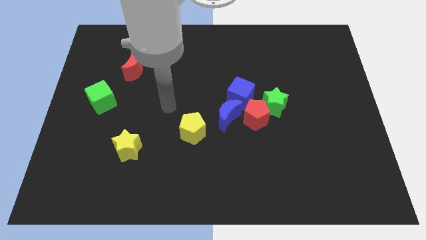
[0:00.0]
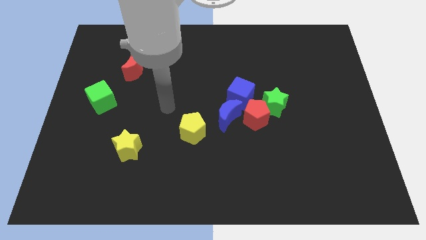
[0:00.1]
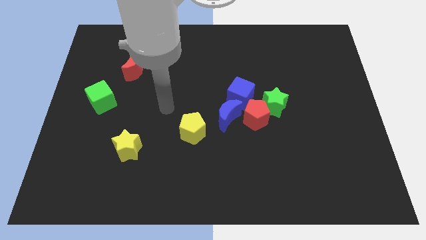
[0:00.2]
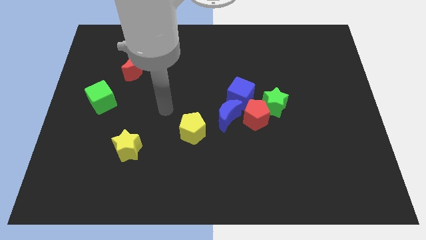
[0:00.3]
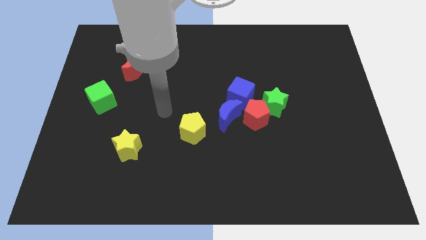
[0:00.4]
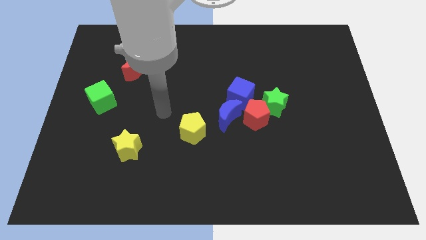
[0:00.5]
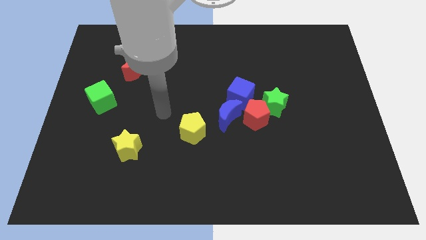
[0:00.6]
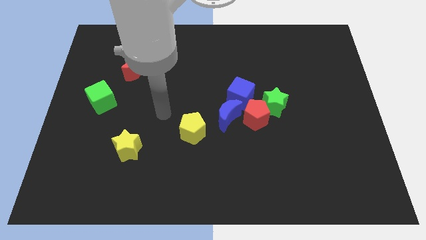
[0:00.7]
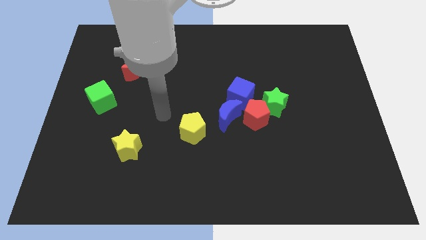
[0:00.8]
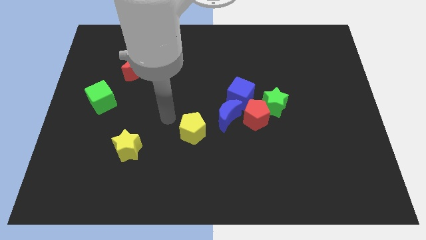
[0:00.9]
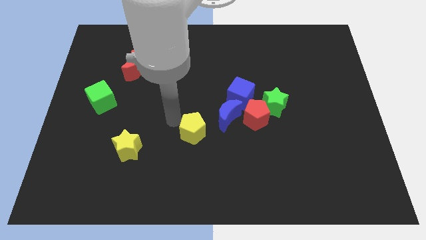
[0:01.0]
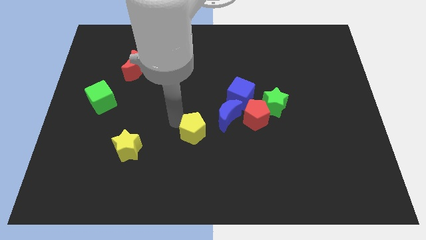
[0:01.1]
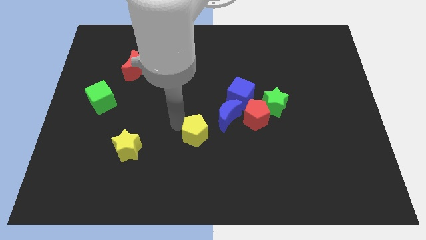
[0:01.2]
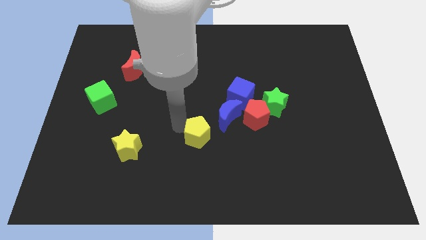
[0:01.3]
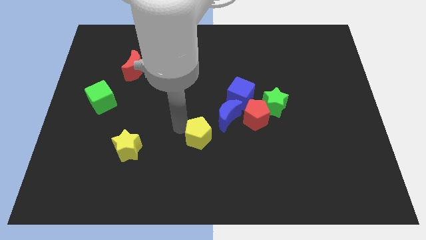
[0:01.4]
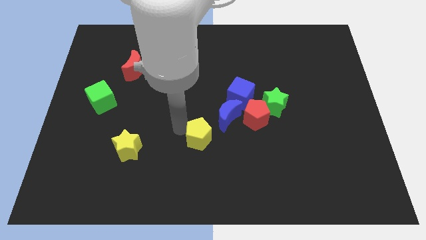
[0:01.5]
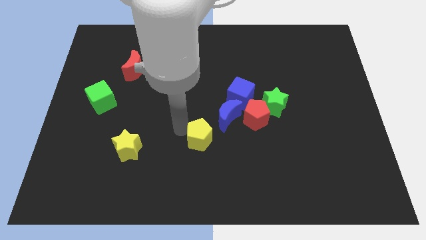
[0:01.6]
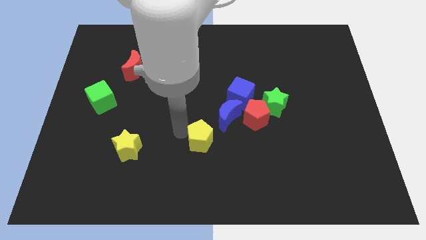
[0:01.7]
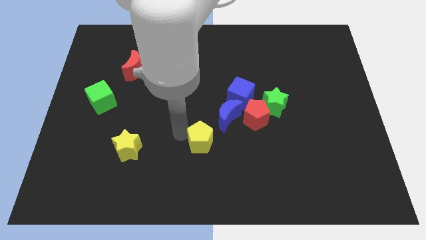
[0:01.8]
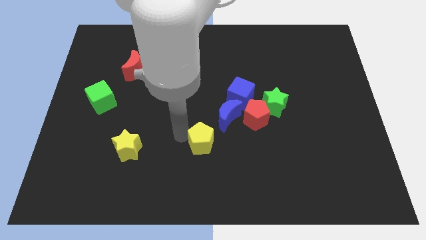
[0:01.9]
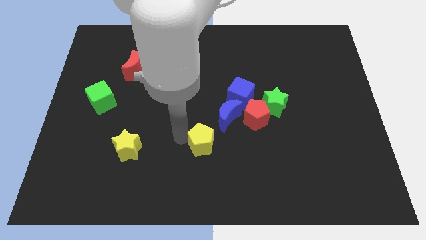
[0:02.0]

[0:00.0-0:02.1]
place yellow pentagon to the right of yellow star

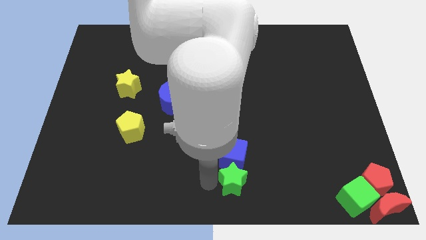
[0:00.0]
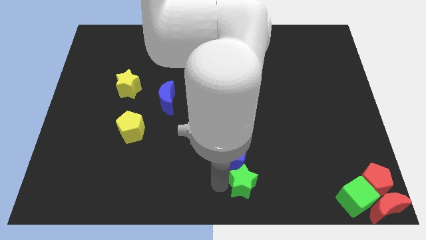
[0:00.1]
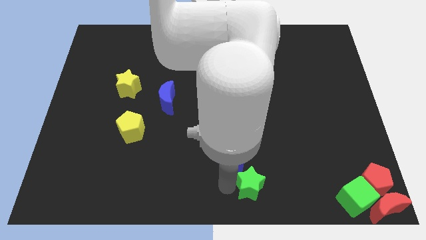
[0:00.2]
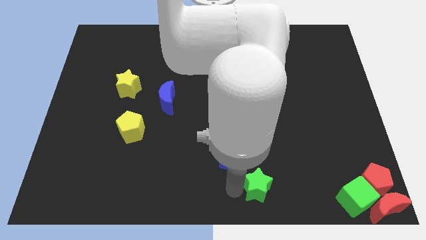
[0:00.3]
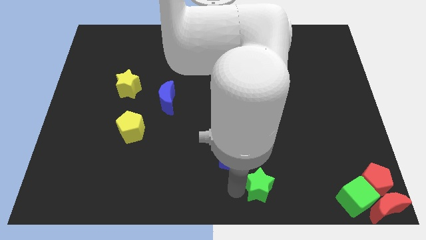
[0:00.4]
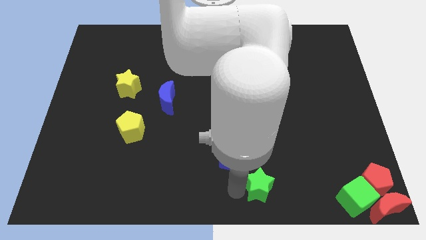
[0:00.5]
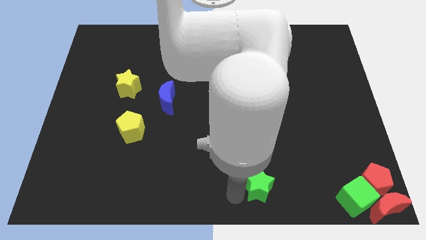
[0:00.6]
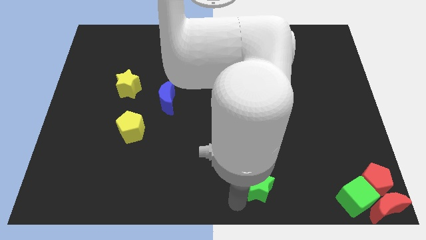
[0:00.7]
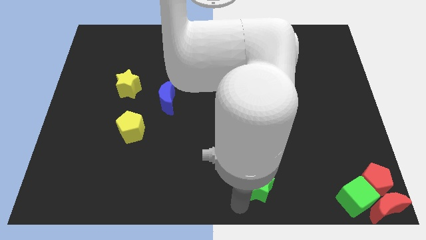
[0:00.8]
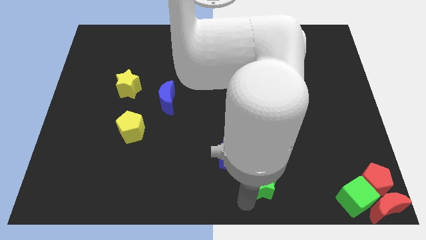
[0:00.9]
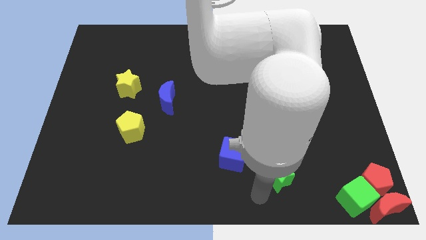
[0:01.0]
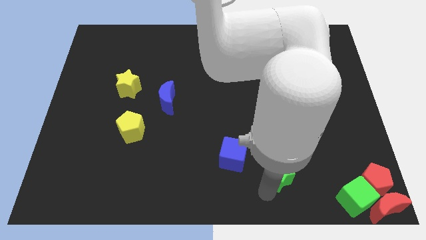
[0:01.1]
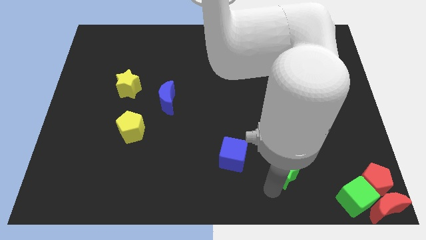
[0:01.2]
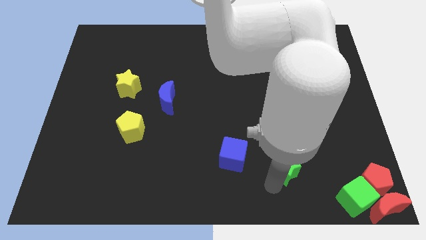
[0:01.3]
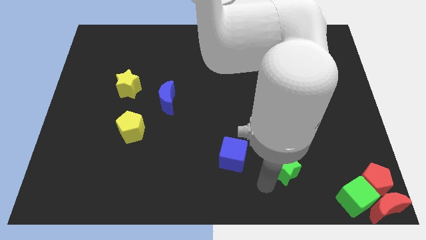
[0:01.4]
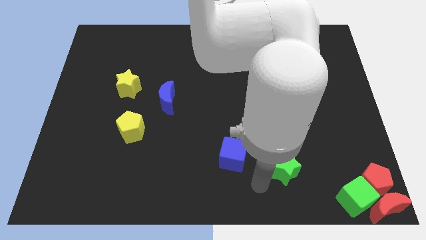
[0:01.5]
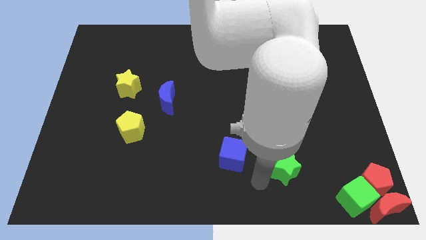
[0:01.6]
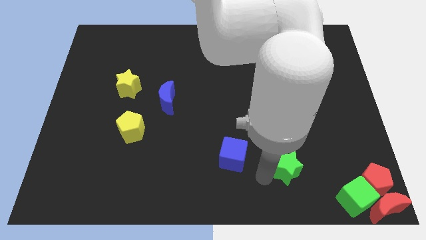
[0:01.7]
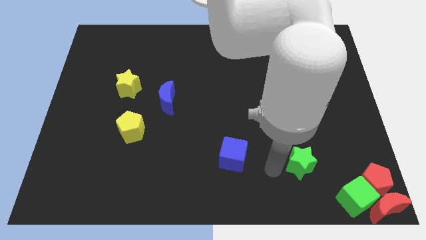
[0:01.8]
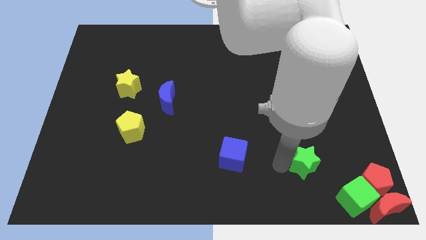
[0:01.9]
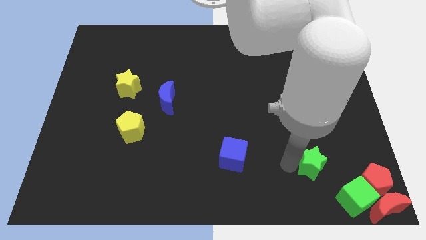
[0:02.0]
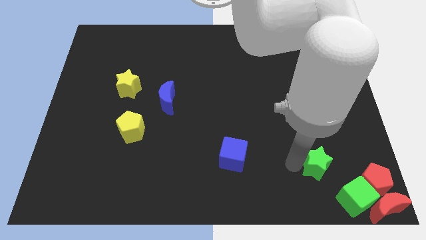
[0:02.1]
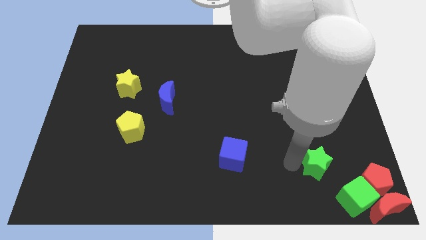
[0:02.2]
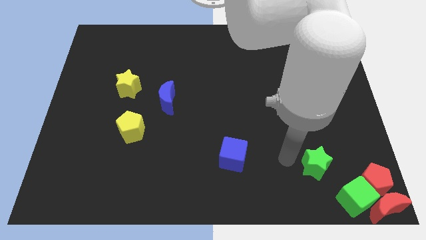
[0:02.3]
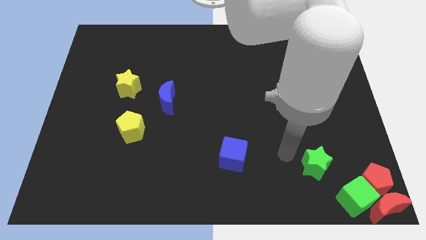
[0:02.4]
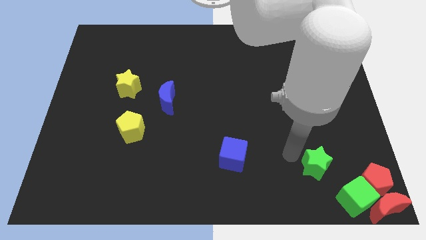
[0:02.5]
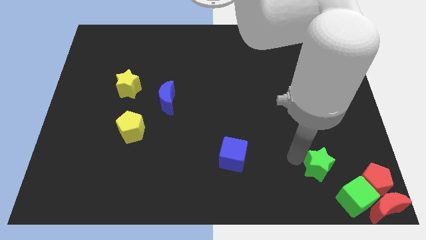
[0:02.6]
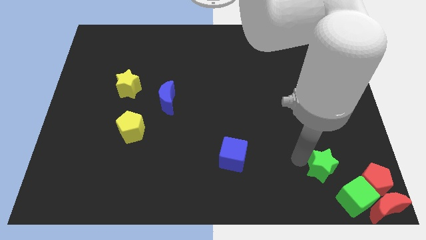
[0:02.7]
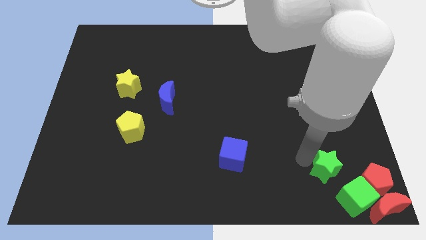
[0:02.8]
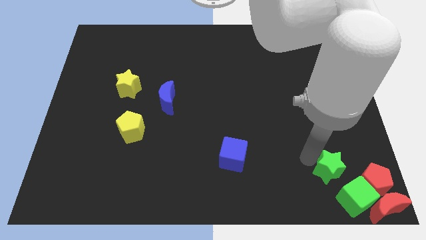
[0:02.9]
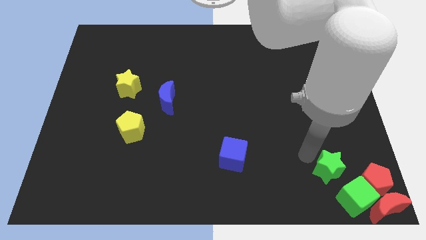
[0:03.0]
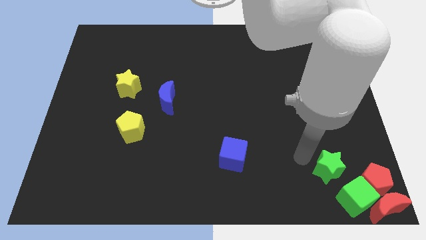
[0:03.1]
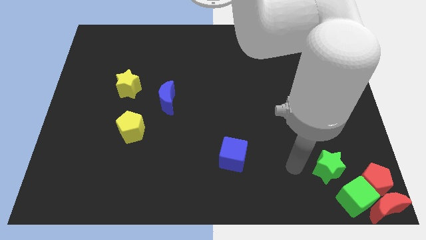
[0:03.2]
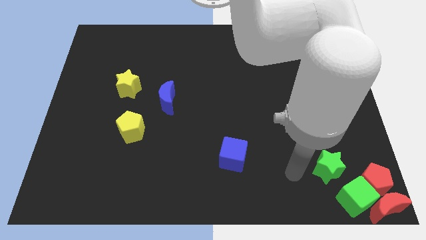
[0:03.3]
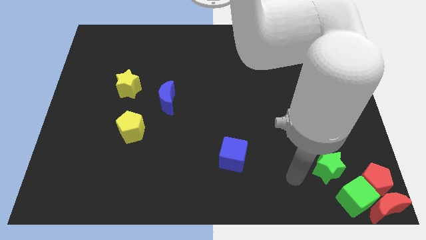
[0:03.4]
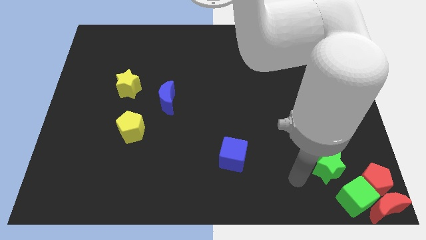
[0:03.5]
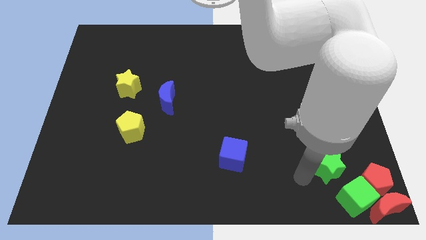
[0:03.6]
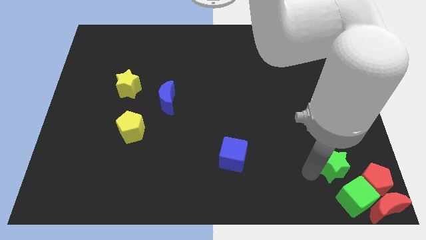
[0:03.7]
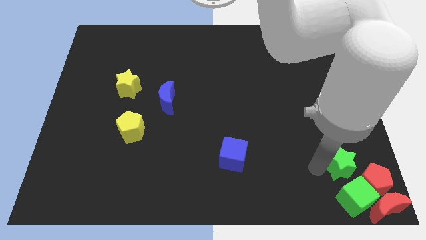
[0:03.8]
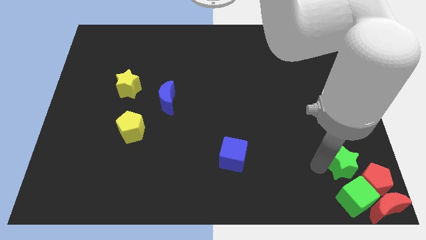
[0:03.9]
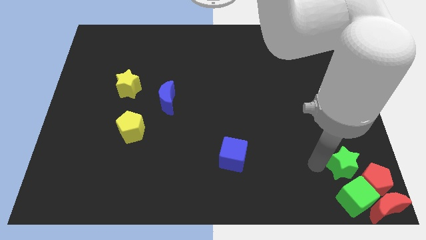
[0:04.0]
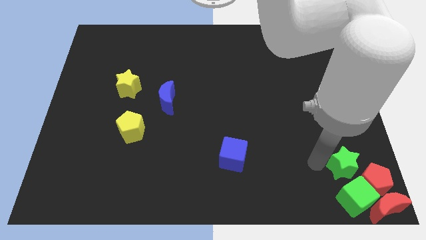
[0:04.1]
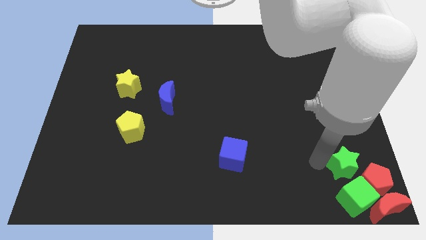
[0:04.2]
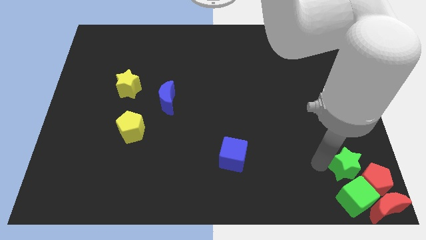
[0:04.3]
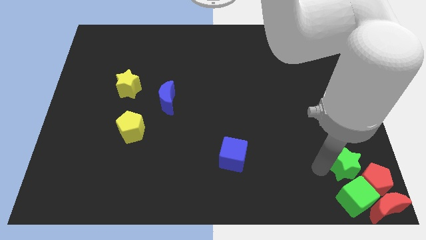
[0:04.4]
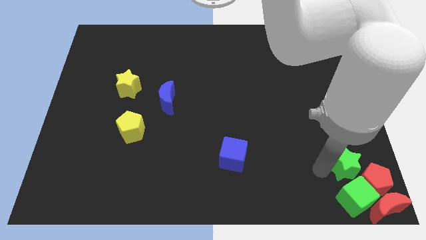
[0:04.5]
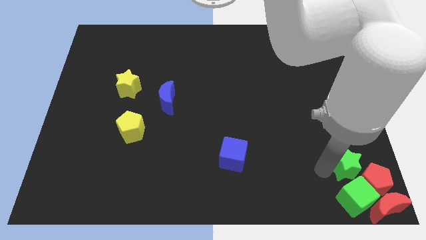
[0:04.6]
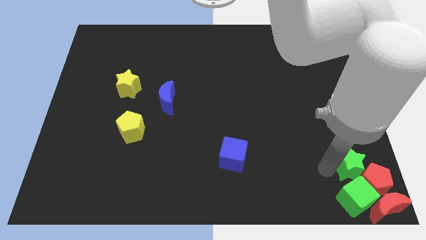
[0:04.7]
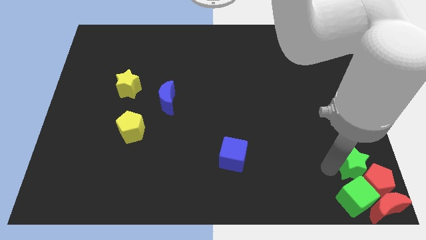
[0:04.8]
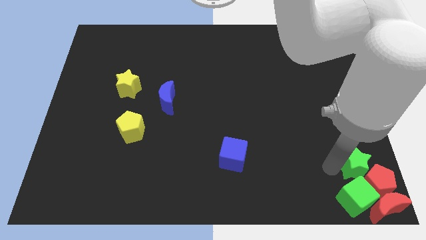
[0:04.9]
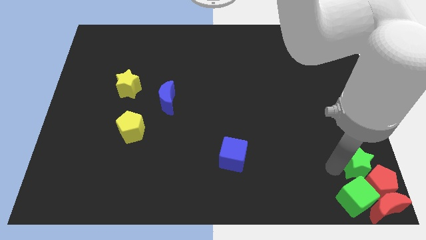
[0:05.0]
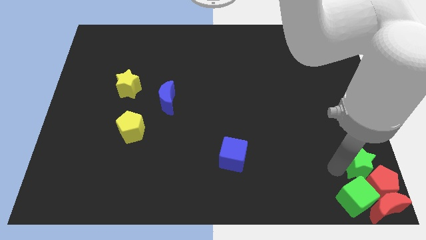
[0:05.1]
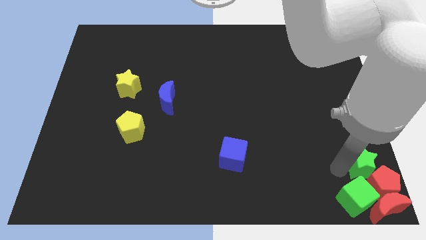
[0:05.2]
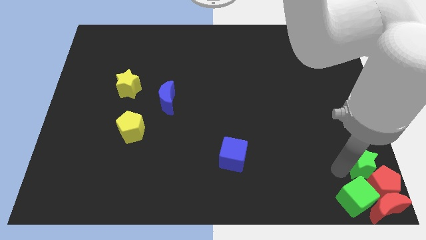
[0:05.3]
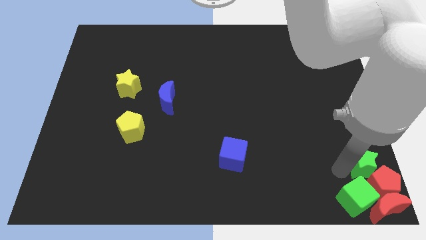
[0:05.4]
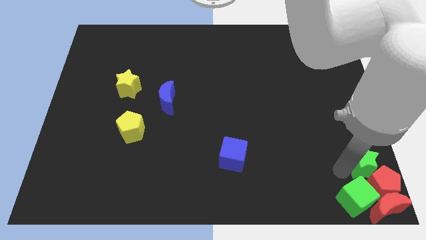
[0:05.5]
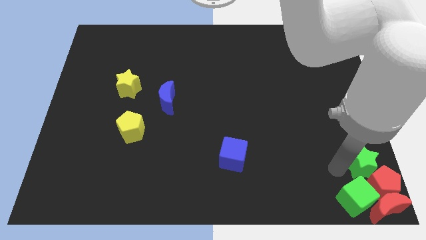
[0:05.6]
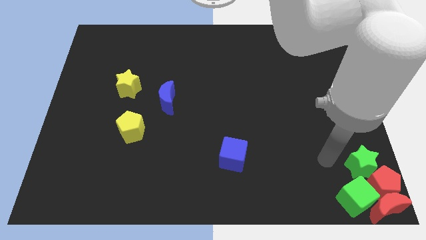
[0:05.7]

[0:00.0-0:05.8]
place the green star above the red pentagon

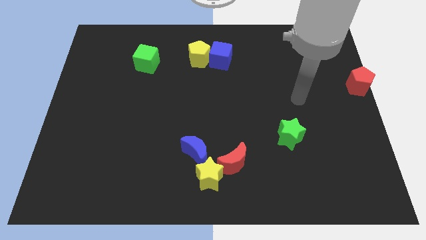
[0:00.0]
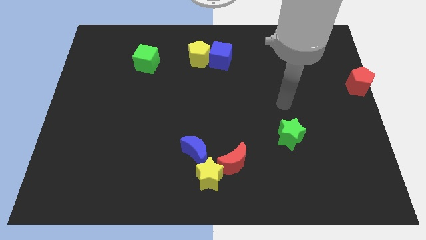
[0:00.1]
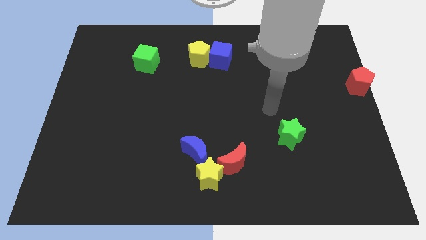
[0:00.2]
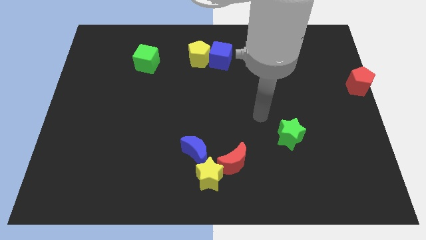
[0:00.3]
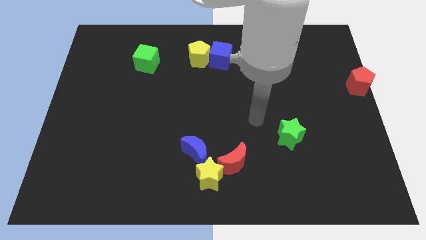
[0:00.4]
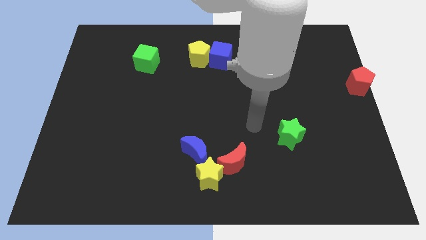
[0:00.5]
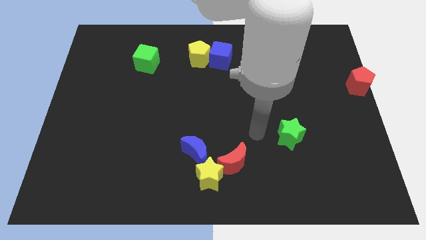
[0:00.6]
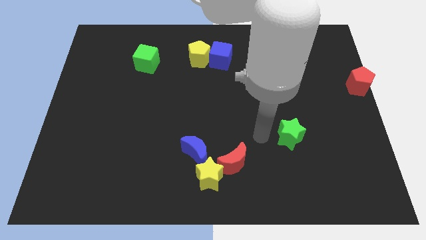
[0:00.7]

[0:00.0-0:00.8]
move arm close to green star

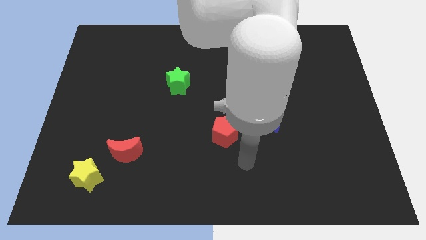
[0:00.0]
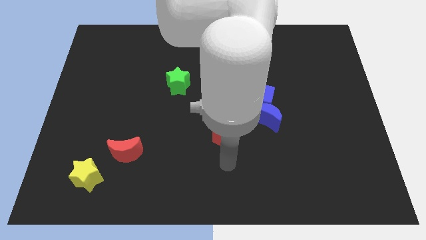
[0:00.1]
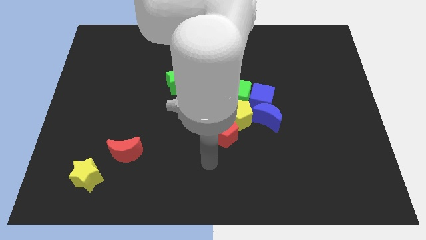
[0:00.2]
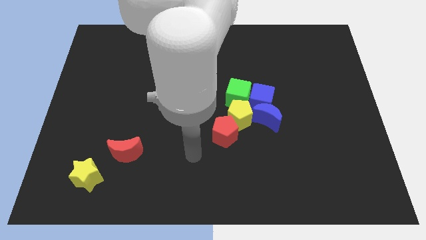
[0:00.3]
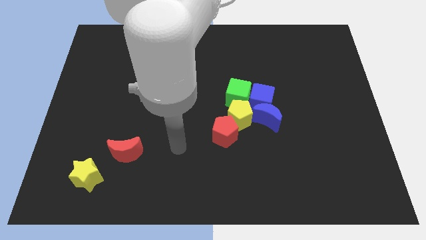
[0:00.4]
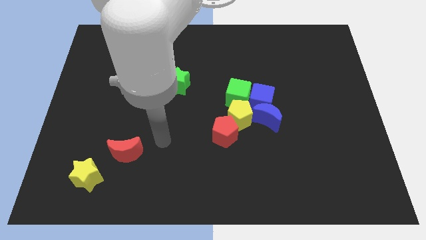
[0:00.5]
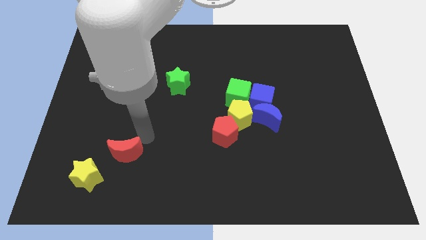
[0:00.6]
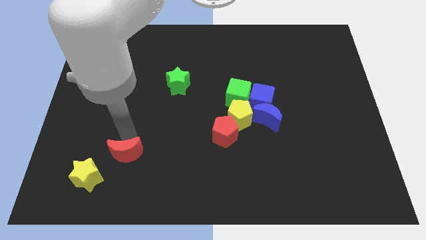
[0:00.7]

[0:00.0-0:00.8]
place arm on the top of red moon
